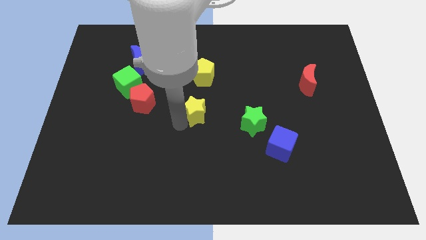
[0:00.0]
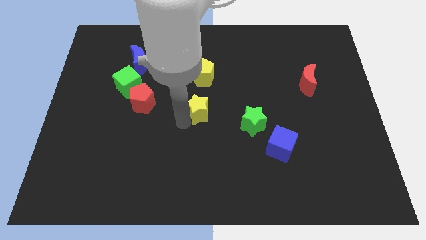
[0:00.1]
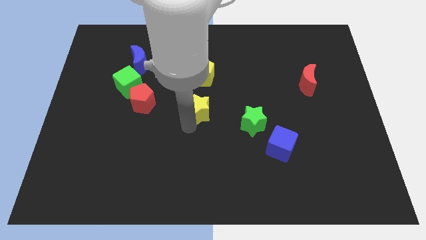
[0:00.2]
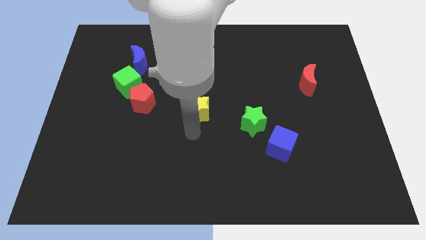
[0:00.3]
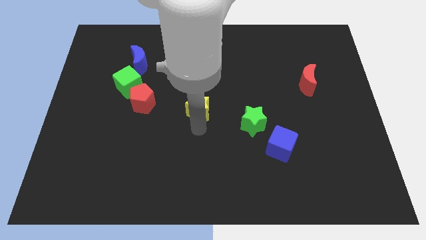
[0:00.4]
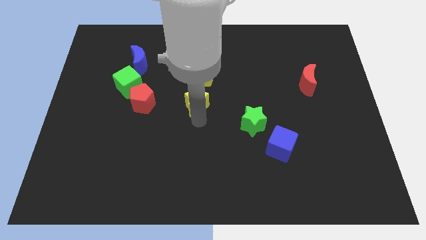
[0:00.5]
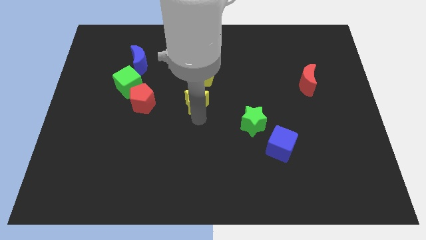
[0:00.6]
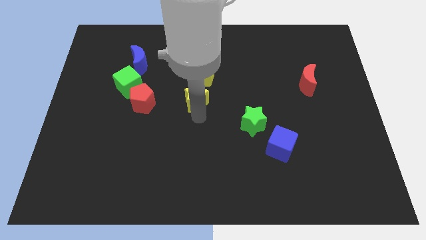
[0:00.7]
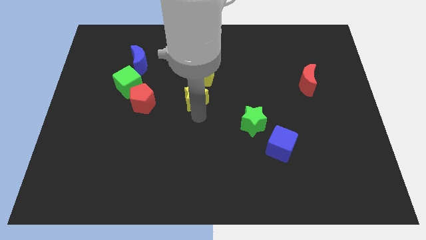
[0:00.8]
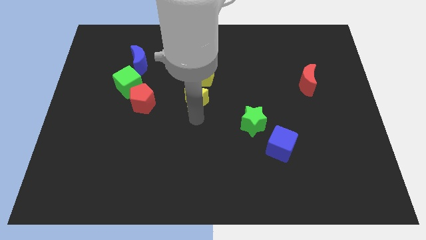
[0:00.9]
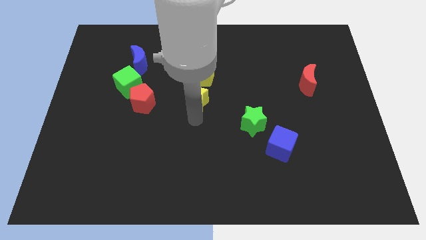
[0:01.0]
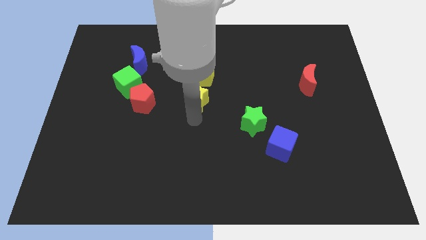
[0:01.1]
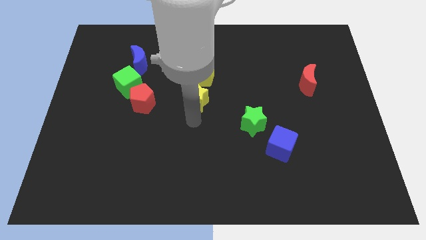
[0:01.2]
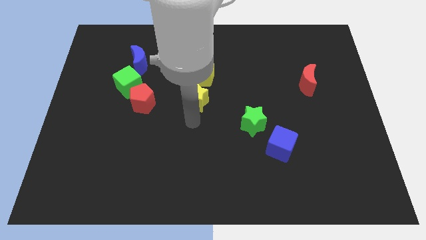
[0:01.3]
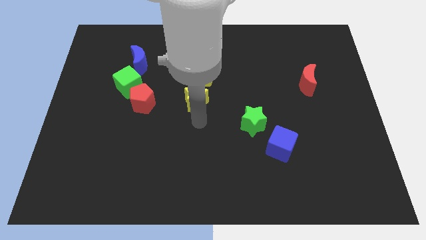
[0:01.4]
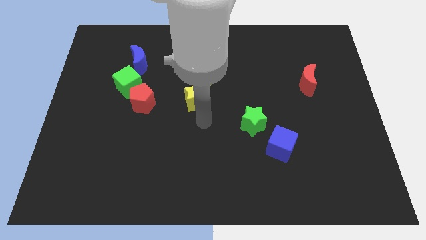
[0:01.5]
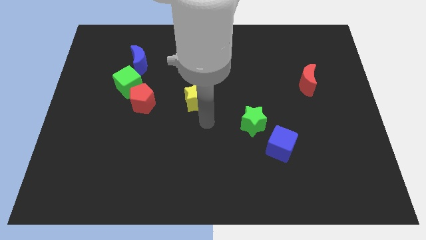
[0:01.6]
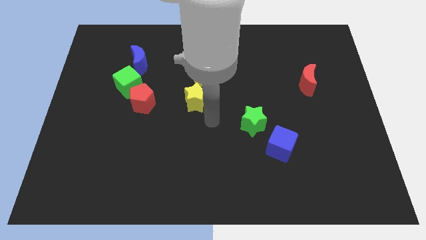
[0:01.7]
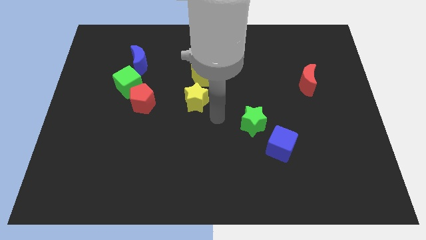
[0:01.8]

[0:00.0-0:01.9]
drag the yellow star close to the yellow pentagon

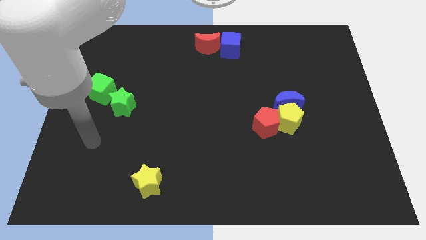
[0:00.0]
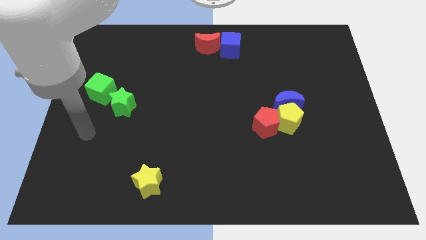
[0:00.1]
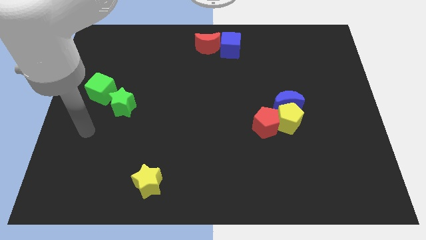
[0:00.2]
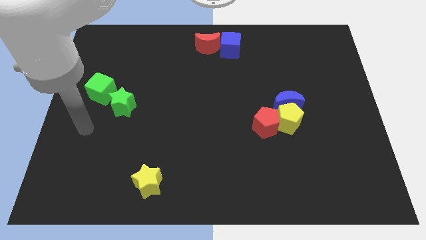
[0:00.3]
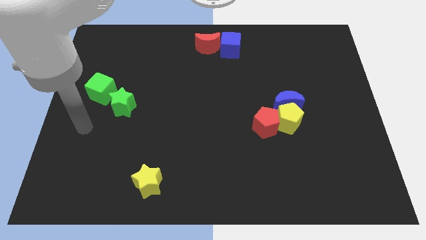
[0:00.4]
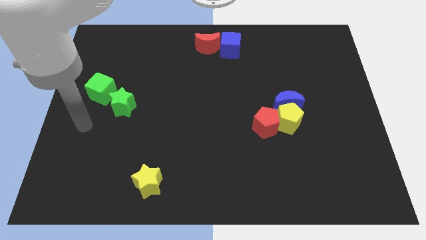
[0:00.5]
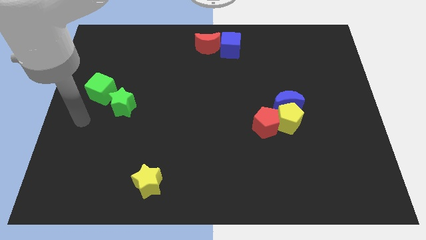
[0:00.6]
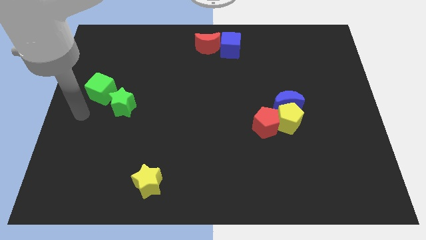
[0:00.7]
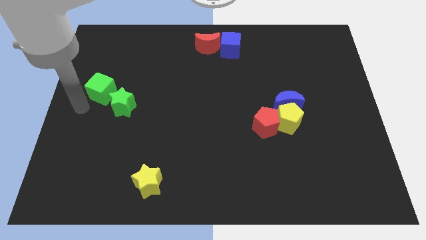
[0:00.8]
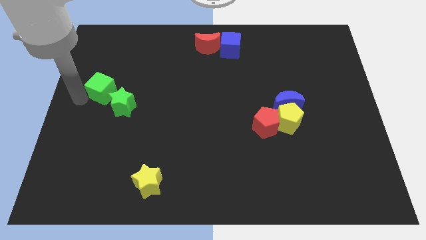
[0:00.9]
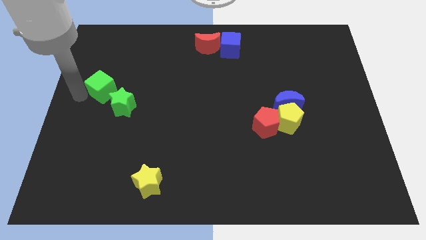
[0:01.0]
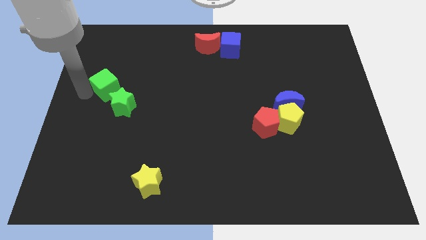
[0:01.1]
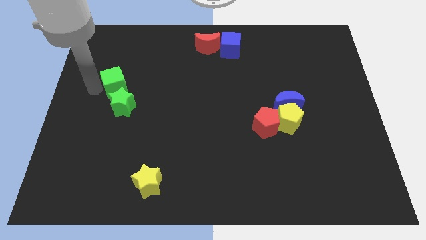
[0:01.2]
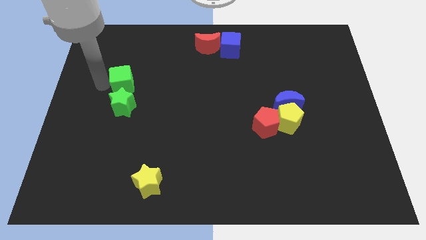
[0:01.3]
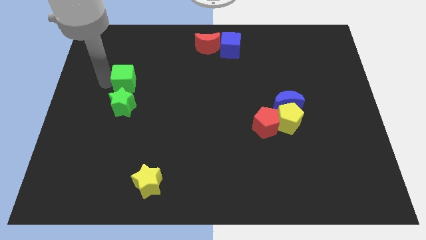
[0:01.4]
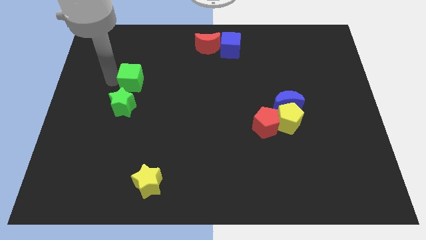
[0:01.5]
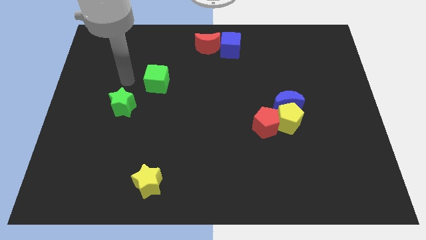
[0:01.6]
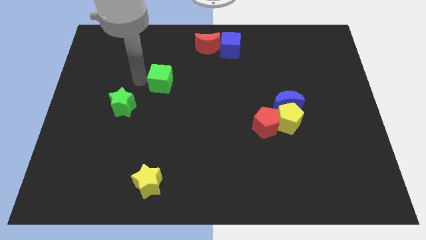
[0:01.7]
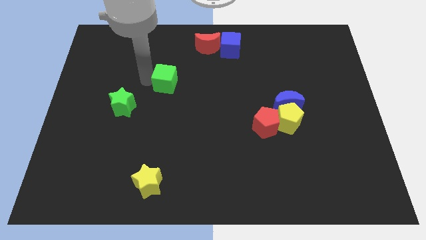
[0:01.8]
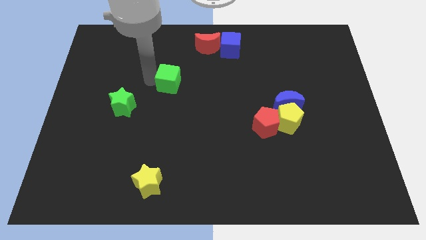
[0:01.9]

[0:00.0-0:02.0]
place the green cube in between the red crescent and green star

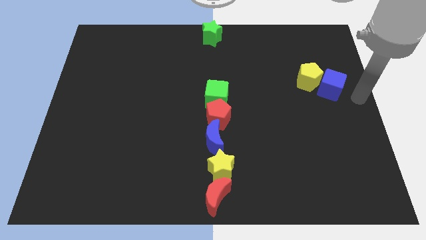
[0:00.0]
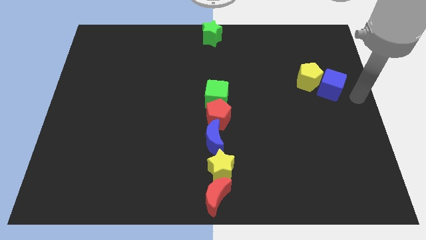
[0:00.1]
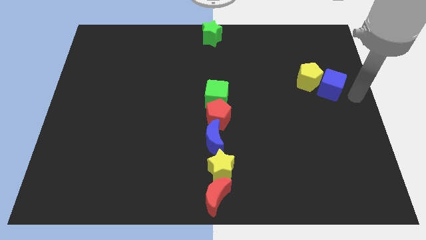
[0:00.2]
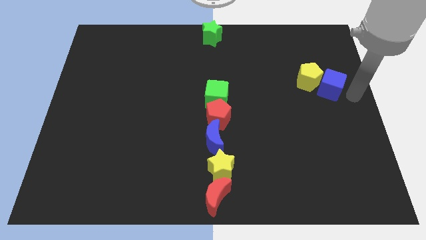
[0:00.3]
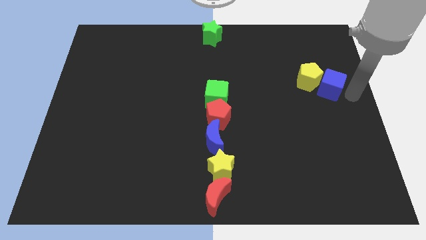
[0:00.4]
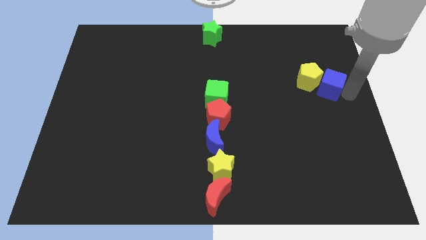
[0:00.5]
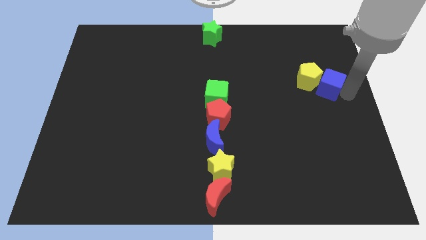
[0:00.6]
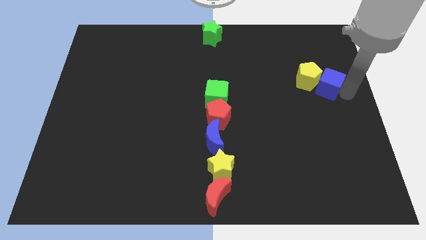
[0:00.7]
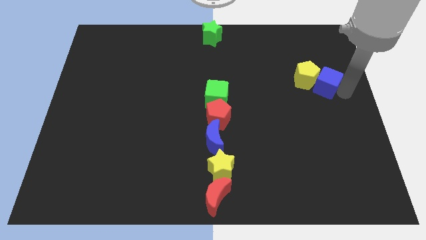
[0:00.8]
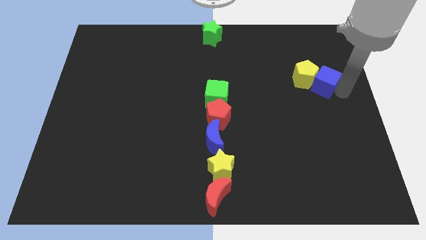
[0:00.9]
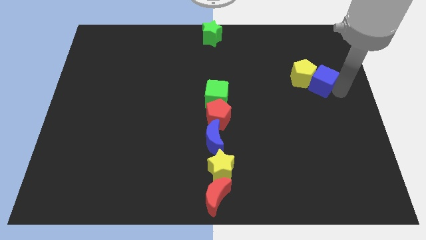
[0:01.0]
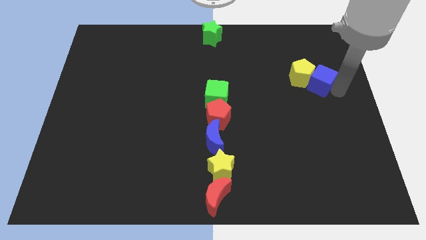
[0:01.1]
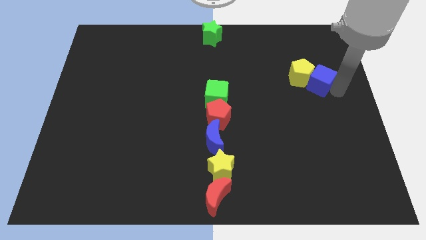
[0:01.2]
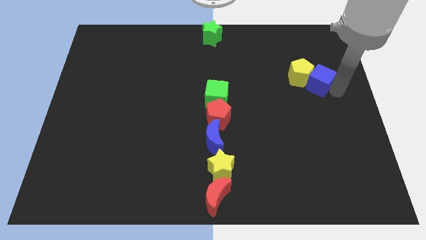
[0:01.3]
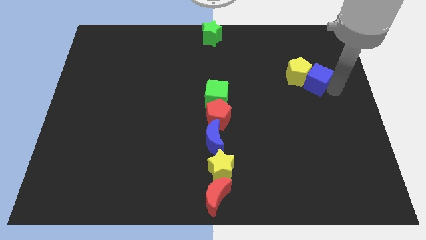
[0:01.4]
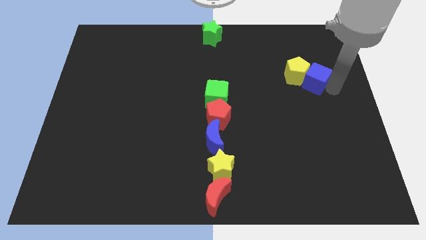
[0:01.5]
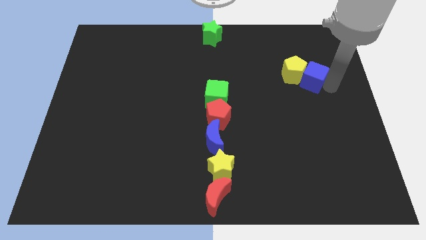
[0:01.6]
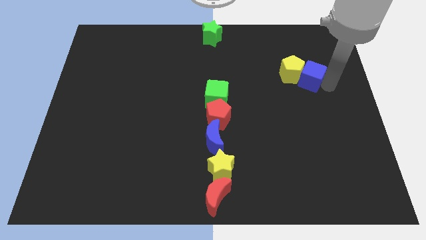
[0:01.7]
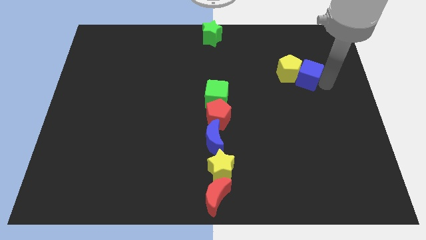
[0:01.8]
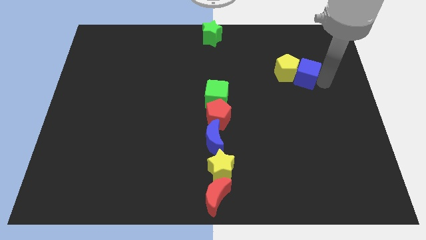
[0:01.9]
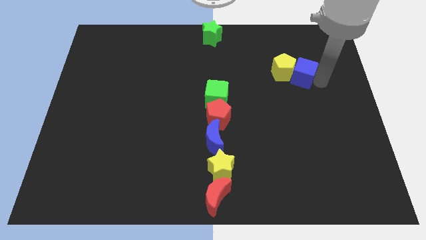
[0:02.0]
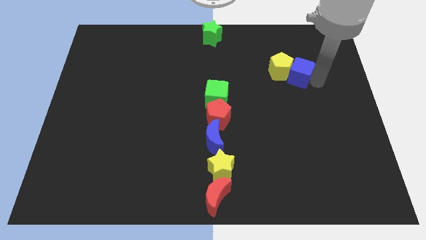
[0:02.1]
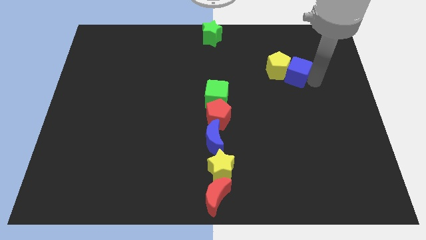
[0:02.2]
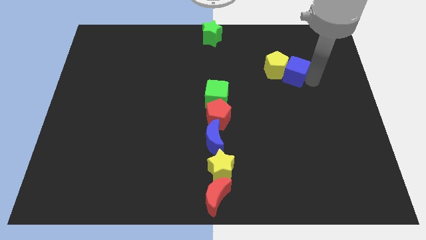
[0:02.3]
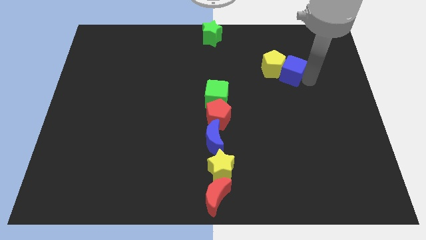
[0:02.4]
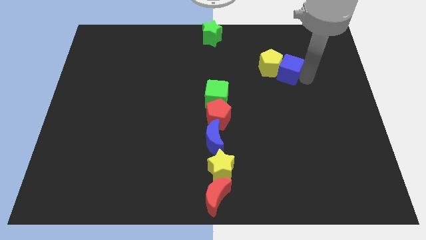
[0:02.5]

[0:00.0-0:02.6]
move the blue cube along with yellow pentagon towards the green star

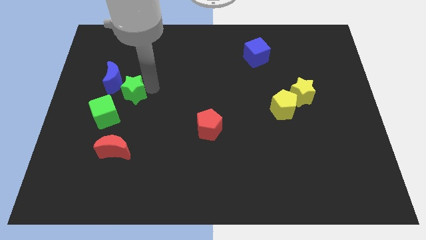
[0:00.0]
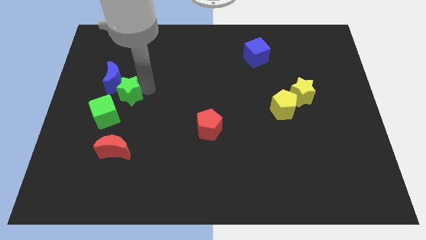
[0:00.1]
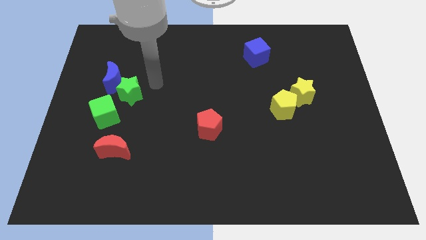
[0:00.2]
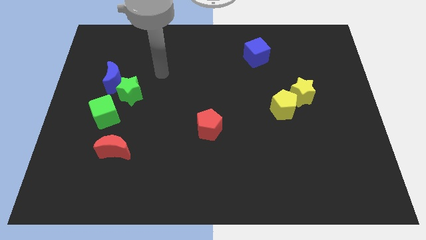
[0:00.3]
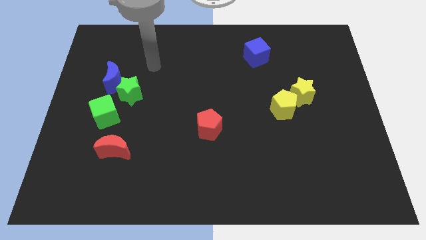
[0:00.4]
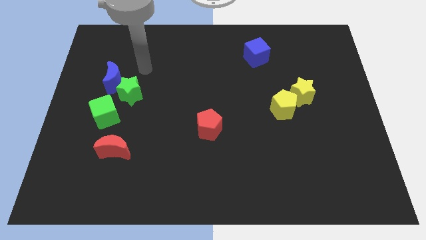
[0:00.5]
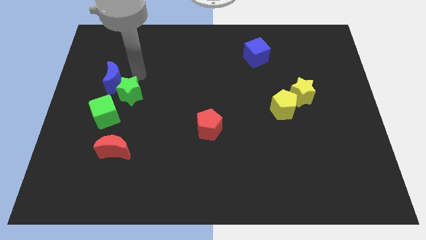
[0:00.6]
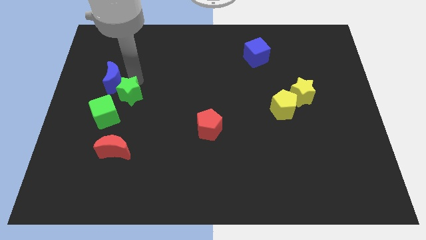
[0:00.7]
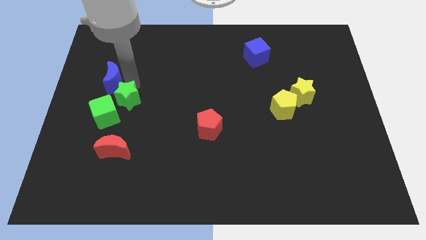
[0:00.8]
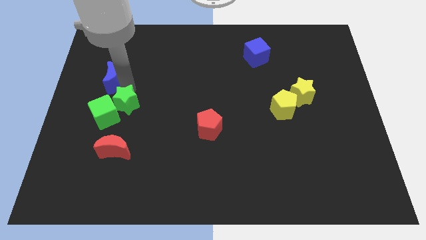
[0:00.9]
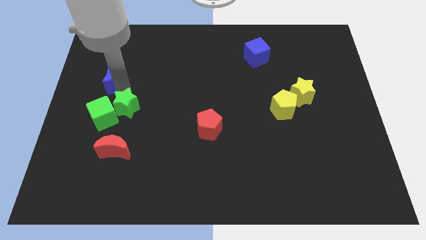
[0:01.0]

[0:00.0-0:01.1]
push the green star into the green cube

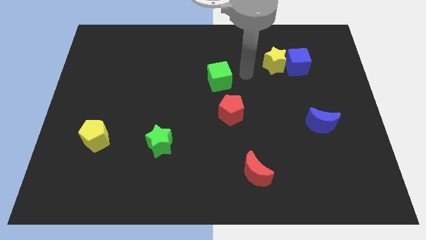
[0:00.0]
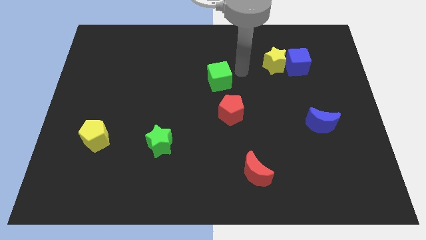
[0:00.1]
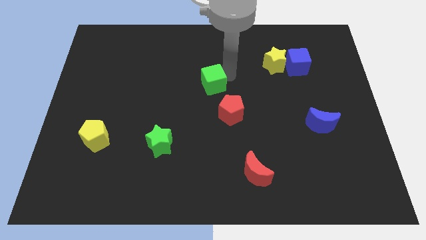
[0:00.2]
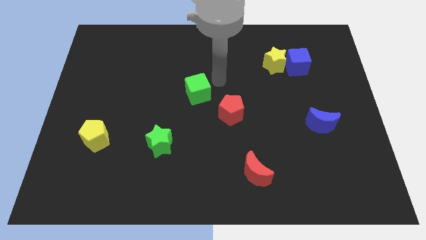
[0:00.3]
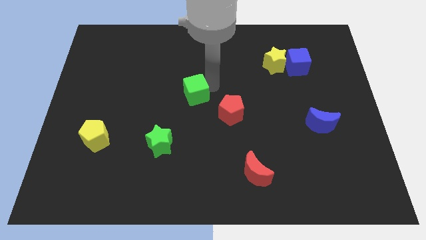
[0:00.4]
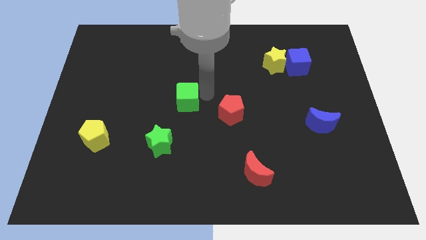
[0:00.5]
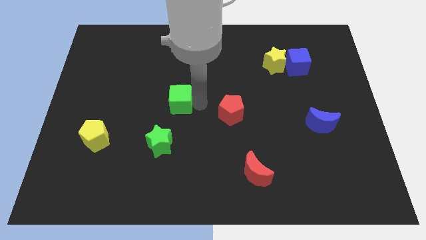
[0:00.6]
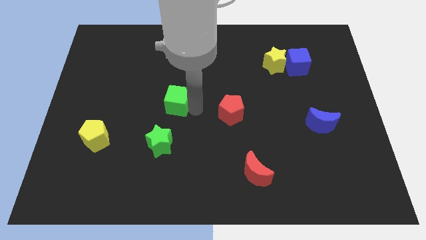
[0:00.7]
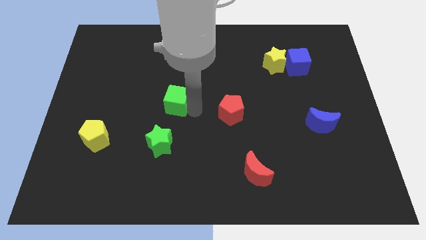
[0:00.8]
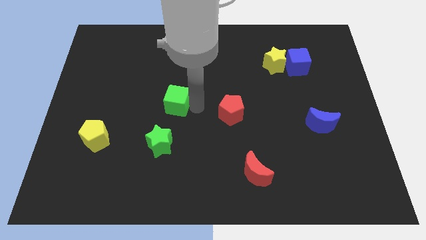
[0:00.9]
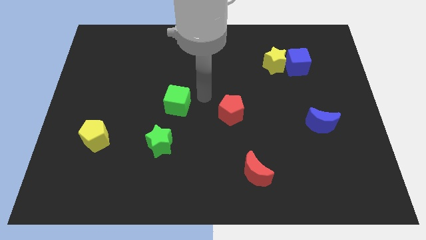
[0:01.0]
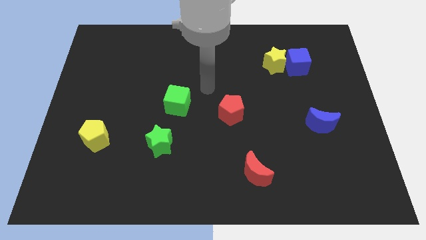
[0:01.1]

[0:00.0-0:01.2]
move the green cube diagonally top right of the green star
